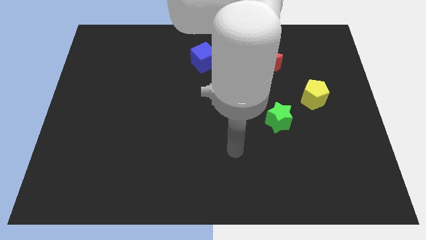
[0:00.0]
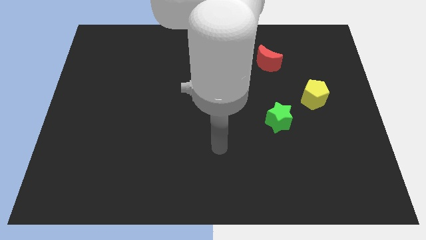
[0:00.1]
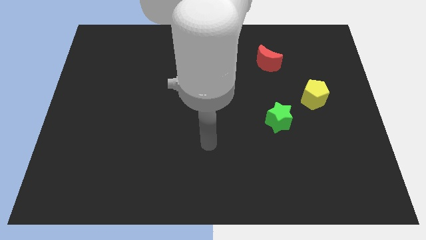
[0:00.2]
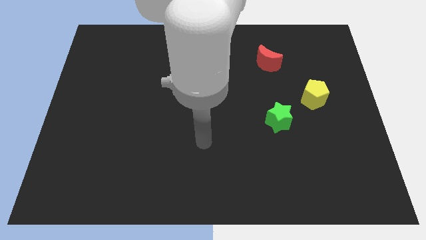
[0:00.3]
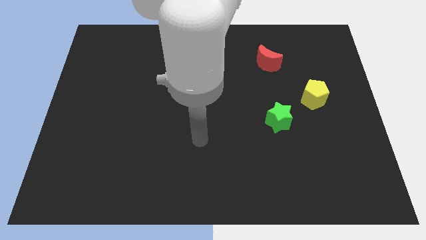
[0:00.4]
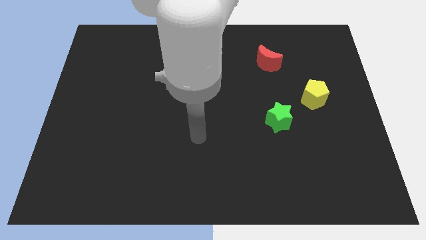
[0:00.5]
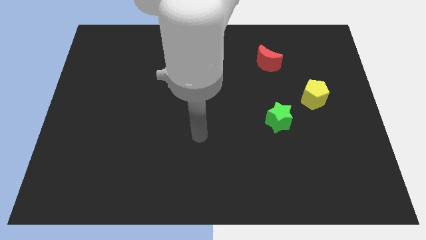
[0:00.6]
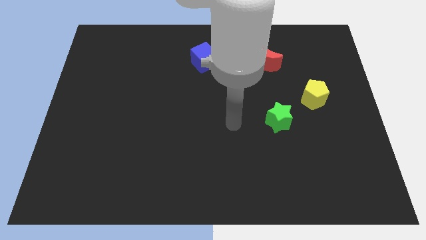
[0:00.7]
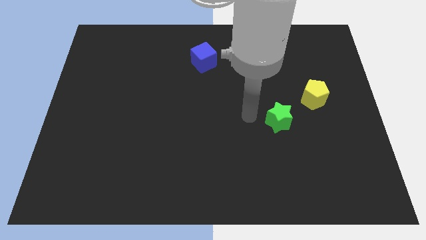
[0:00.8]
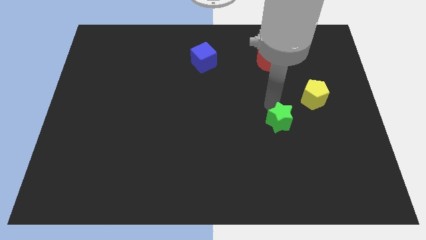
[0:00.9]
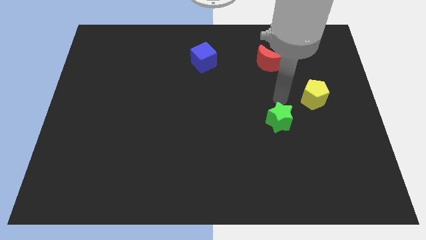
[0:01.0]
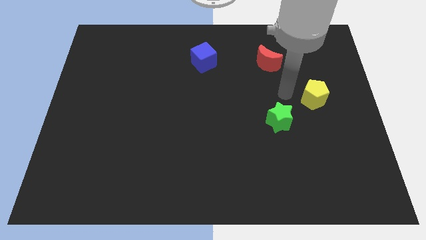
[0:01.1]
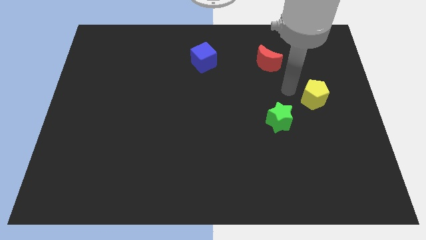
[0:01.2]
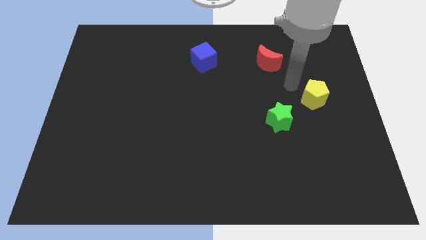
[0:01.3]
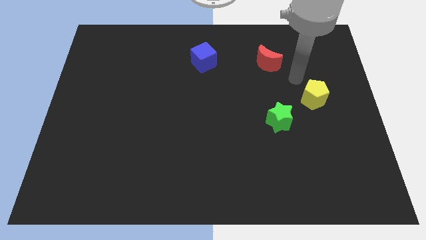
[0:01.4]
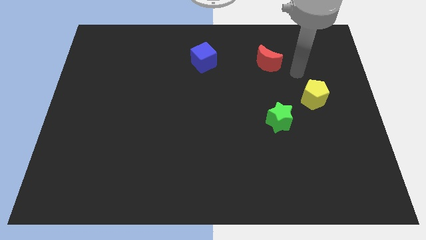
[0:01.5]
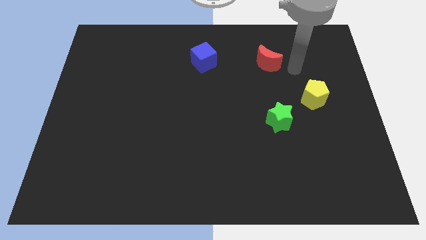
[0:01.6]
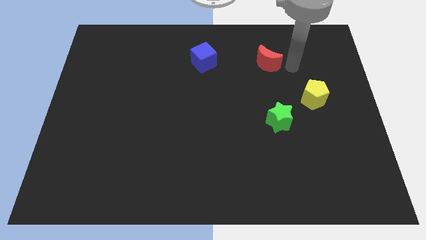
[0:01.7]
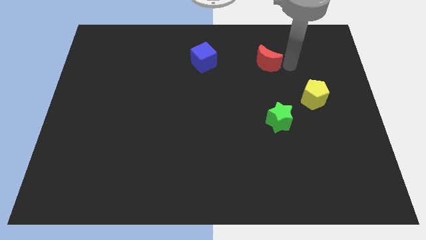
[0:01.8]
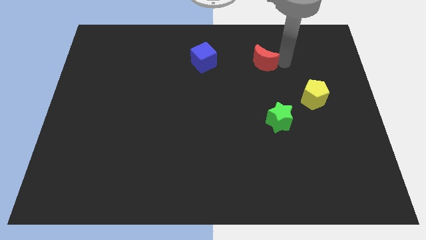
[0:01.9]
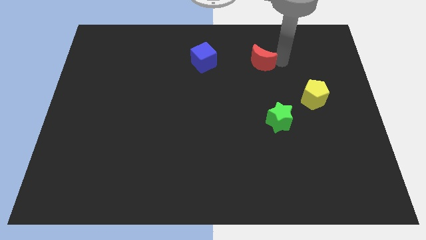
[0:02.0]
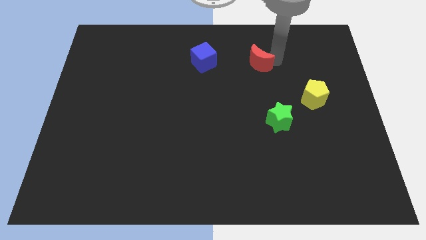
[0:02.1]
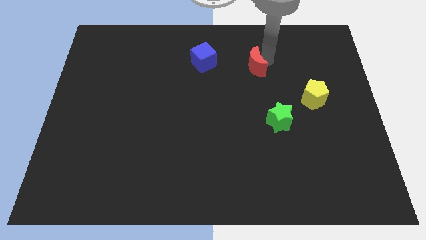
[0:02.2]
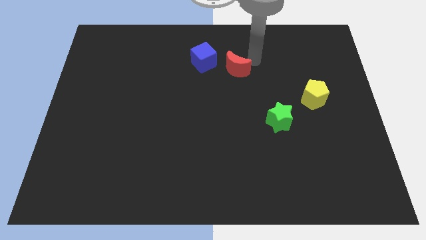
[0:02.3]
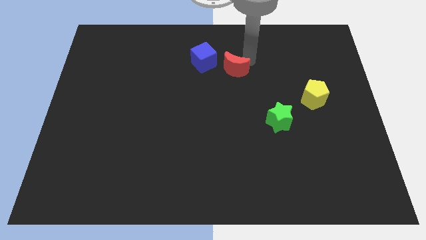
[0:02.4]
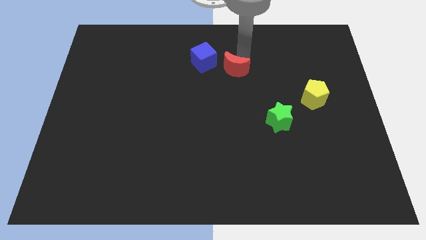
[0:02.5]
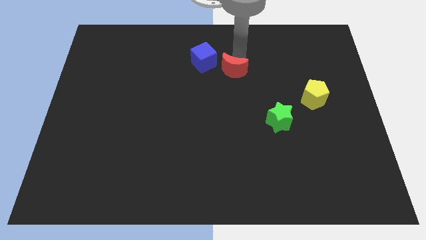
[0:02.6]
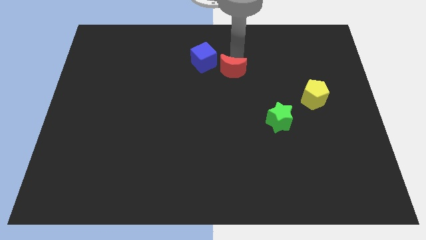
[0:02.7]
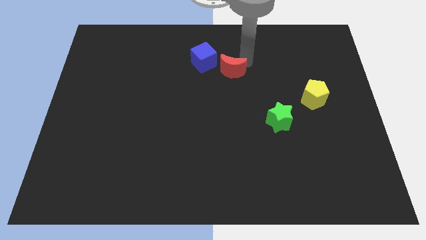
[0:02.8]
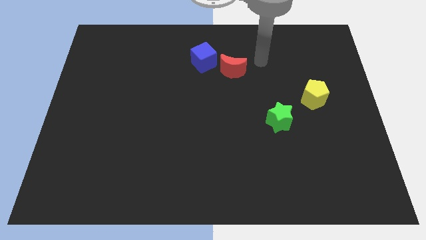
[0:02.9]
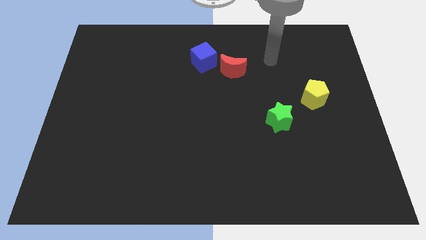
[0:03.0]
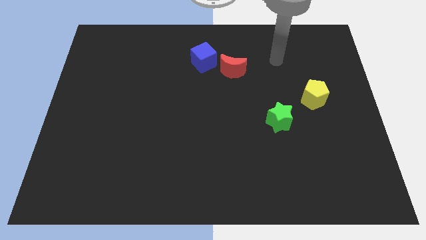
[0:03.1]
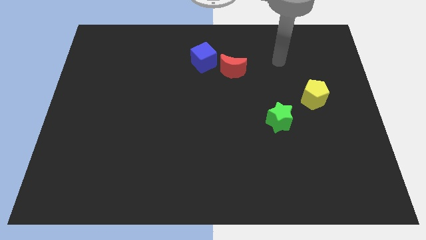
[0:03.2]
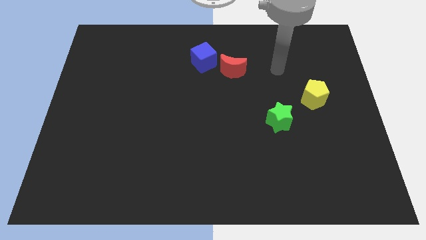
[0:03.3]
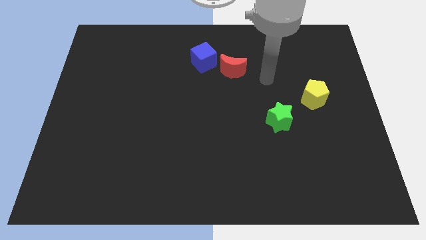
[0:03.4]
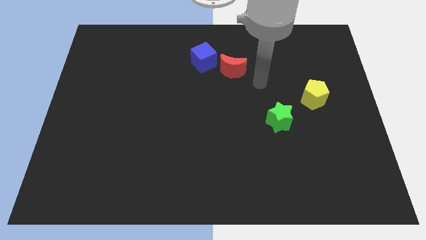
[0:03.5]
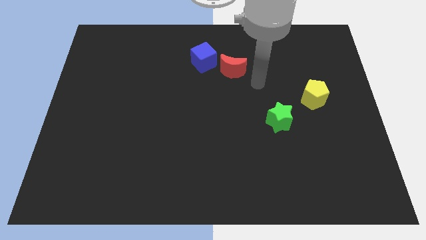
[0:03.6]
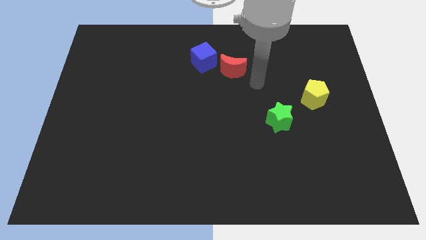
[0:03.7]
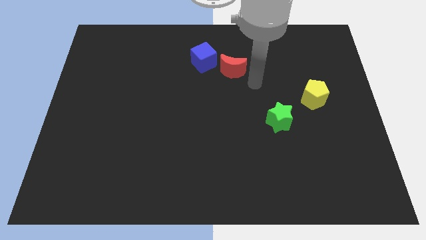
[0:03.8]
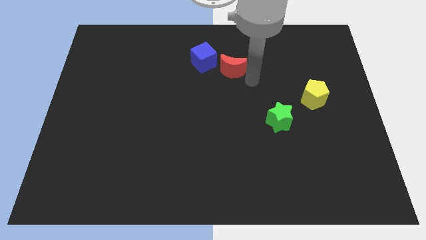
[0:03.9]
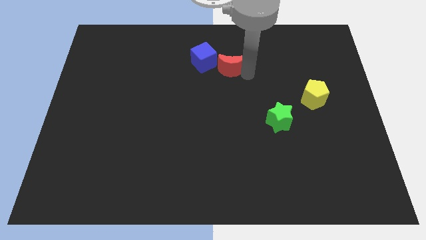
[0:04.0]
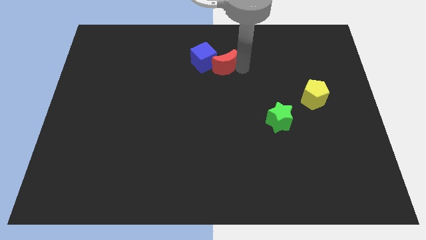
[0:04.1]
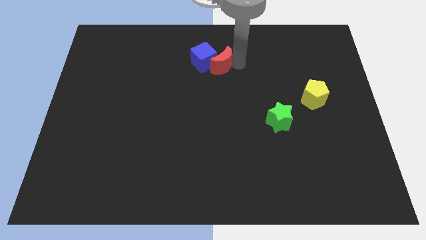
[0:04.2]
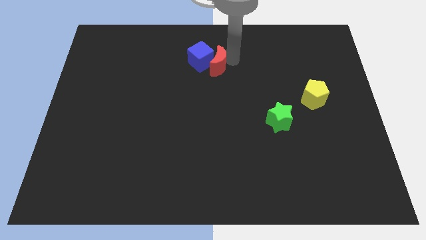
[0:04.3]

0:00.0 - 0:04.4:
slide the moon close to the blue cube

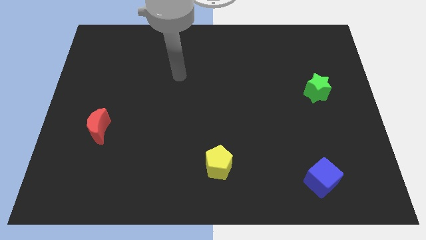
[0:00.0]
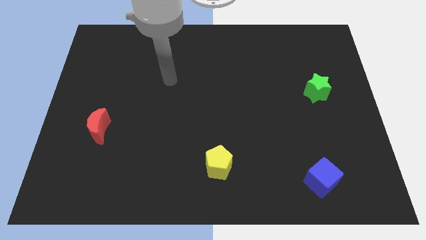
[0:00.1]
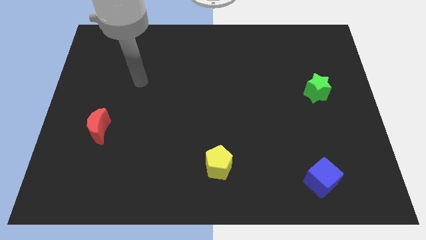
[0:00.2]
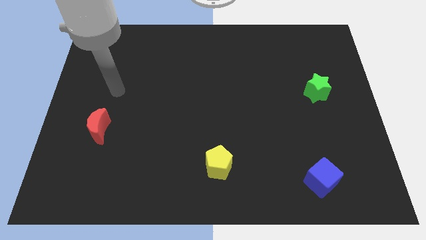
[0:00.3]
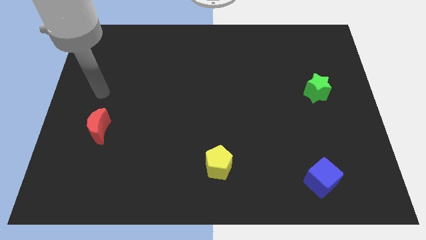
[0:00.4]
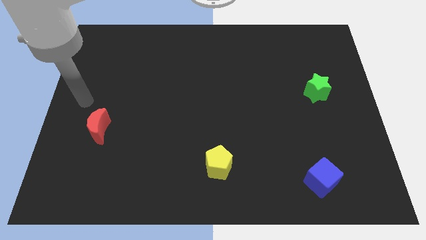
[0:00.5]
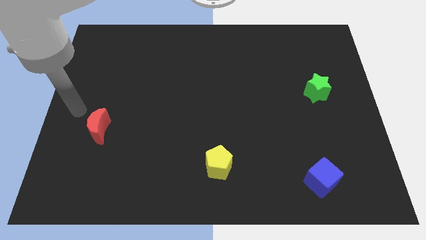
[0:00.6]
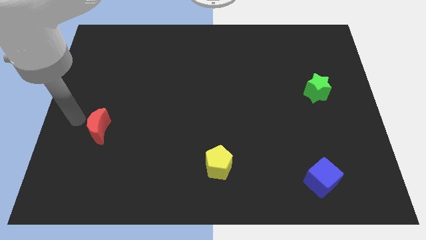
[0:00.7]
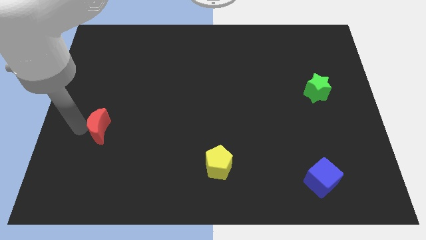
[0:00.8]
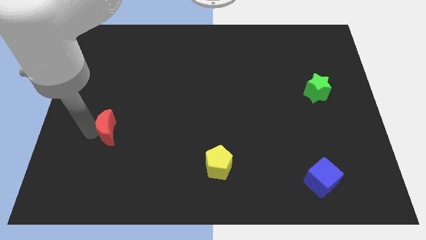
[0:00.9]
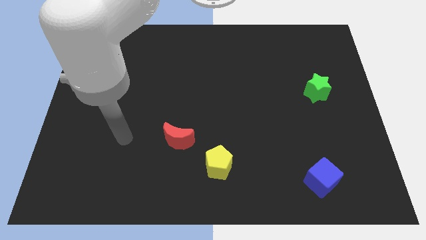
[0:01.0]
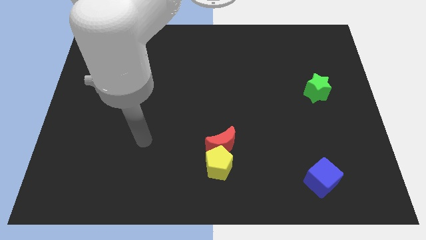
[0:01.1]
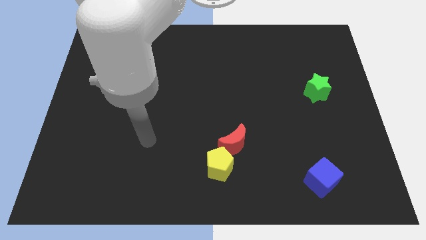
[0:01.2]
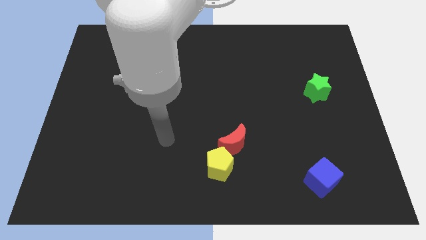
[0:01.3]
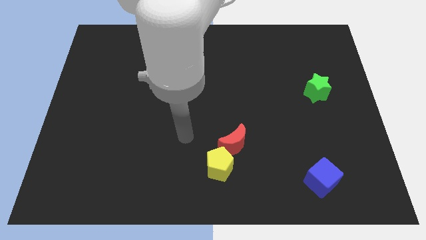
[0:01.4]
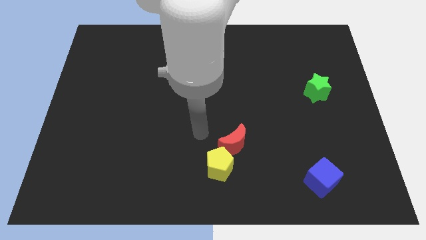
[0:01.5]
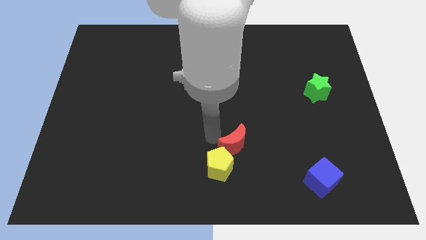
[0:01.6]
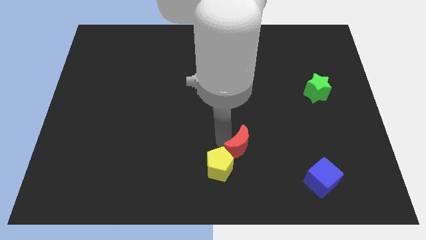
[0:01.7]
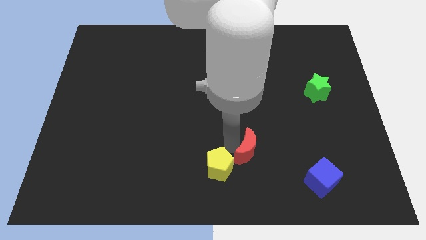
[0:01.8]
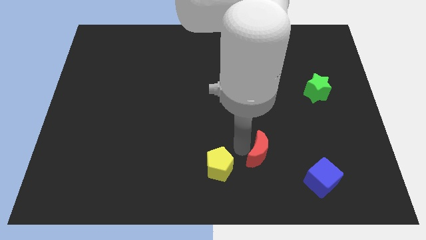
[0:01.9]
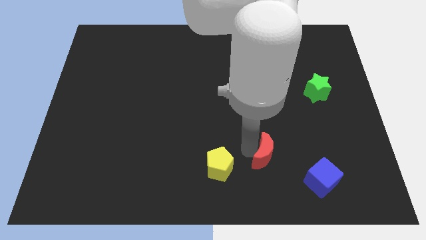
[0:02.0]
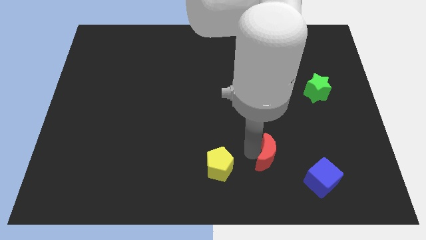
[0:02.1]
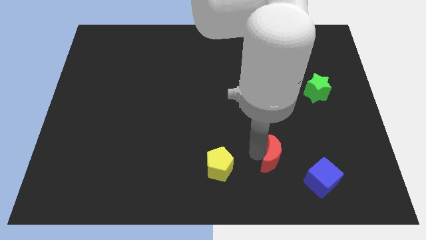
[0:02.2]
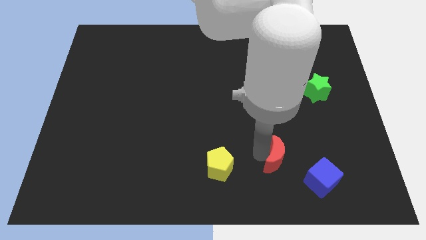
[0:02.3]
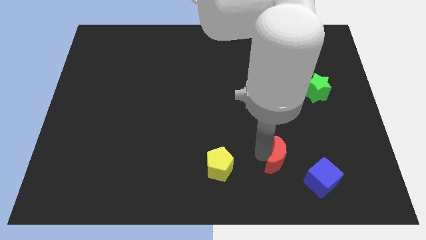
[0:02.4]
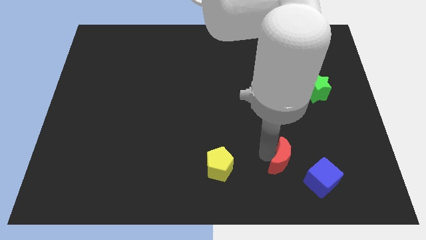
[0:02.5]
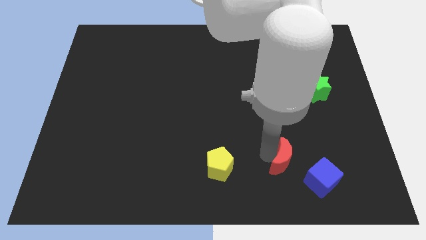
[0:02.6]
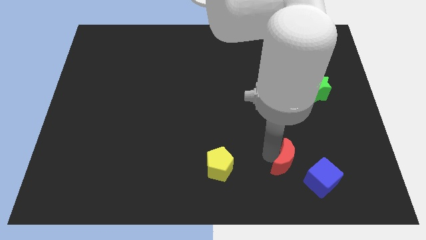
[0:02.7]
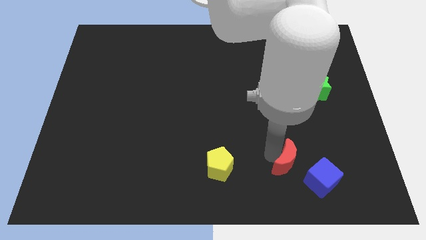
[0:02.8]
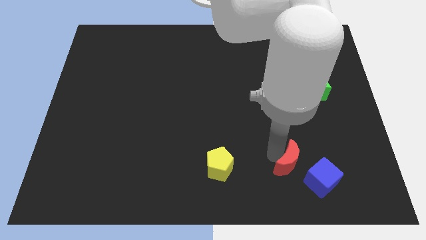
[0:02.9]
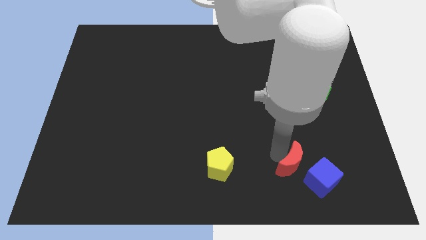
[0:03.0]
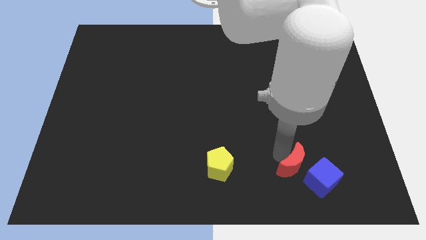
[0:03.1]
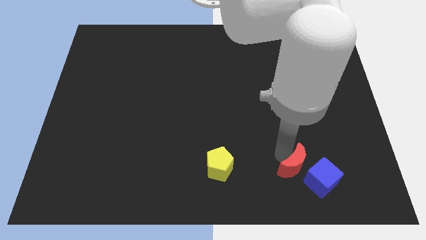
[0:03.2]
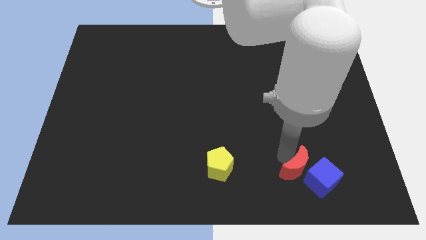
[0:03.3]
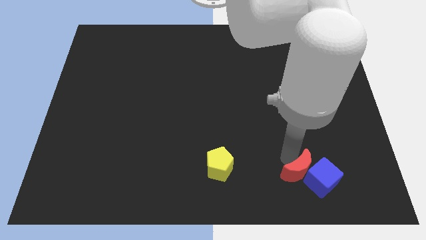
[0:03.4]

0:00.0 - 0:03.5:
slide the moon to the cube

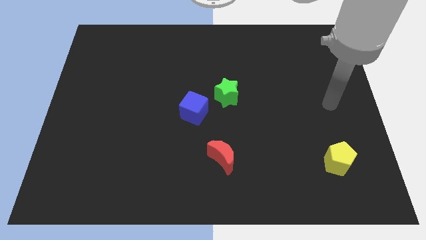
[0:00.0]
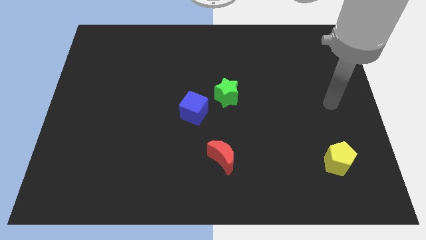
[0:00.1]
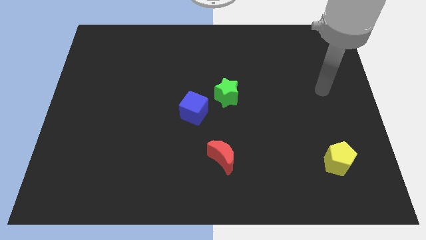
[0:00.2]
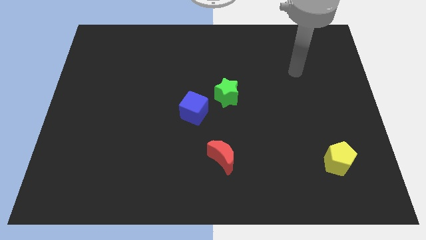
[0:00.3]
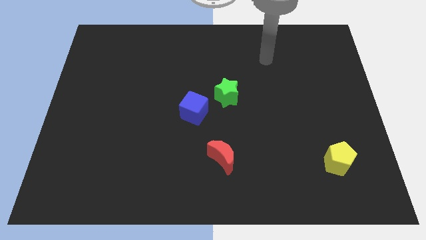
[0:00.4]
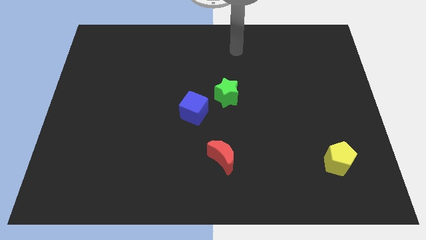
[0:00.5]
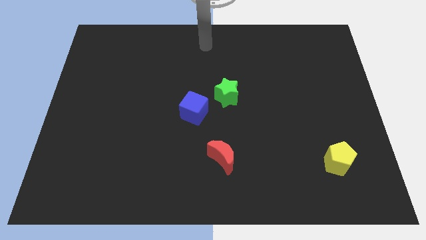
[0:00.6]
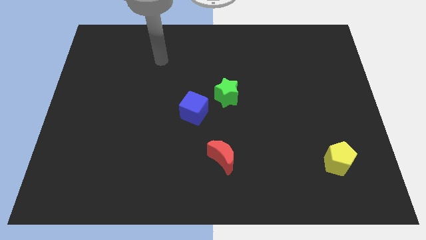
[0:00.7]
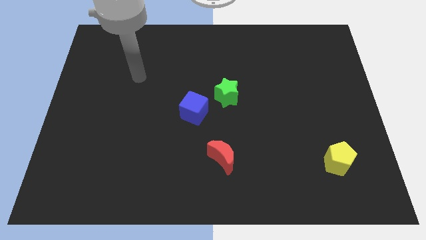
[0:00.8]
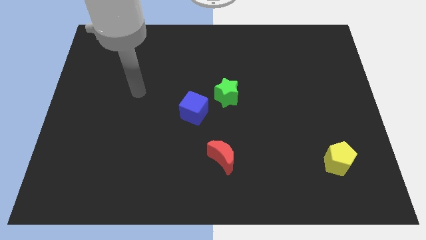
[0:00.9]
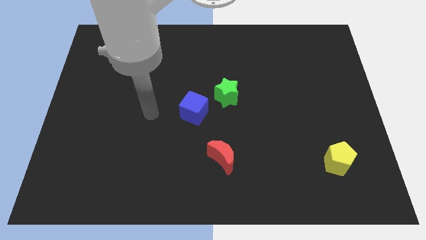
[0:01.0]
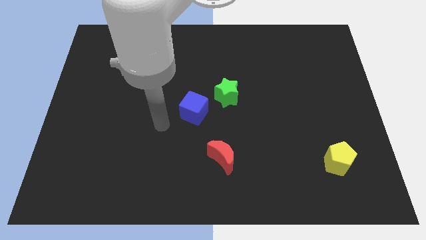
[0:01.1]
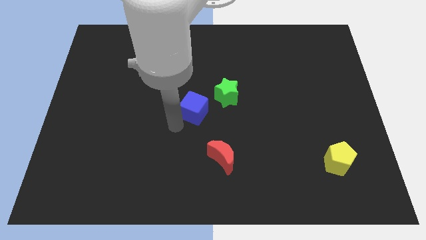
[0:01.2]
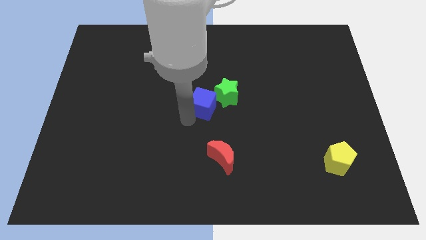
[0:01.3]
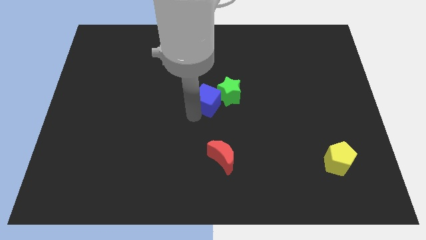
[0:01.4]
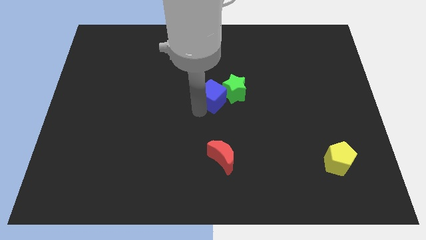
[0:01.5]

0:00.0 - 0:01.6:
move the blue block close to the green block
